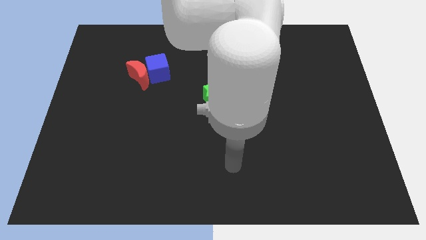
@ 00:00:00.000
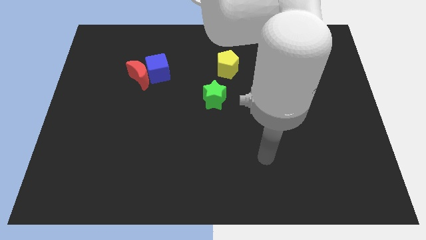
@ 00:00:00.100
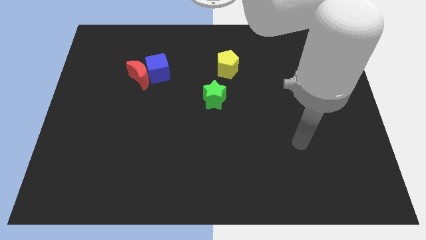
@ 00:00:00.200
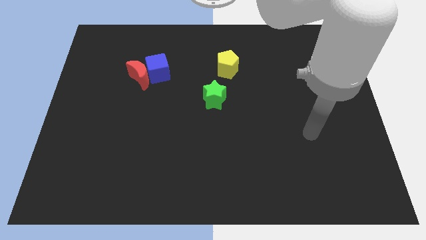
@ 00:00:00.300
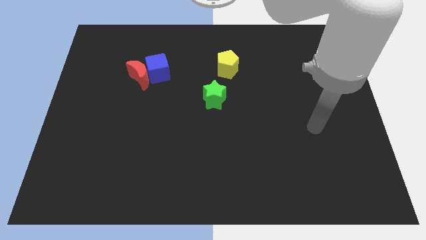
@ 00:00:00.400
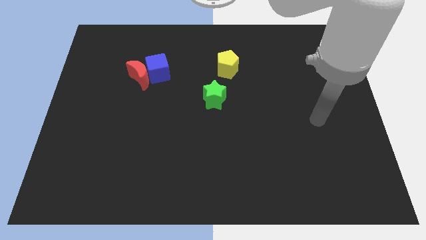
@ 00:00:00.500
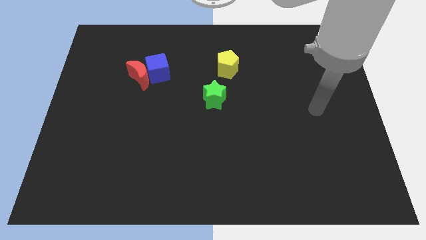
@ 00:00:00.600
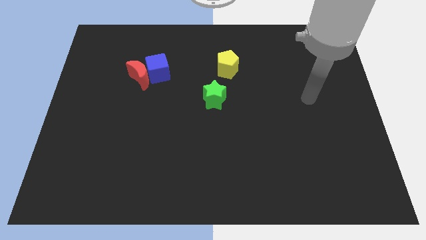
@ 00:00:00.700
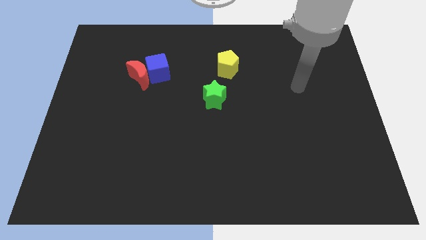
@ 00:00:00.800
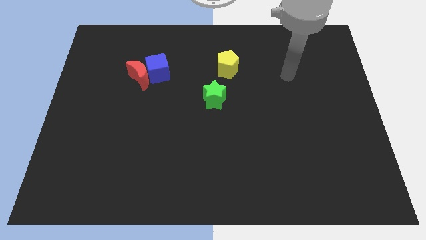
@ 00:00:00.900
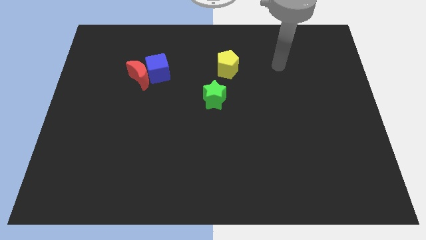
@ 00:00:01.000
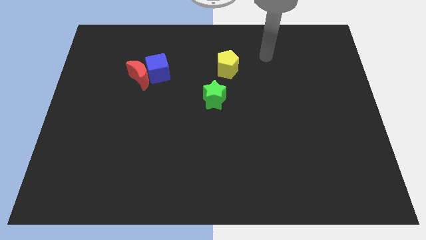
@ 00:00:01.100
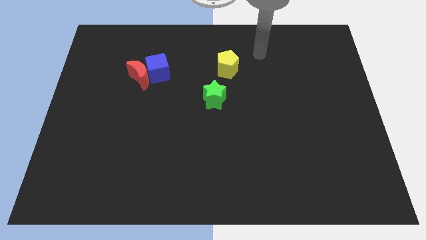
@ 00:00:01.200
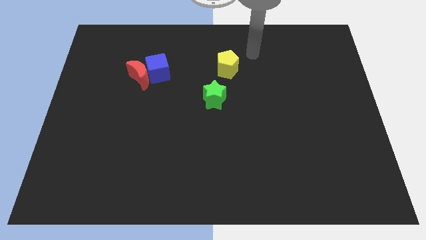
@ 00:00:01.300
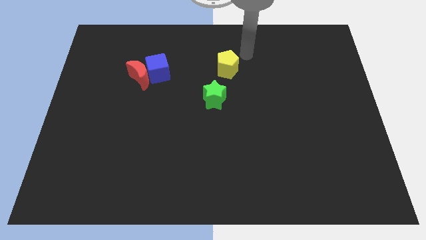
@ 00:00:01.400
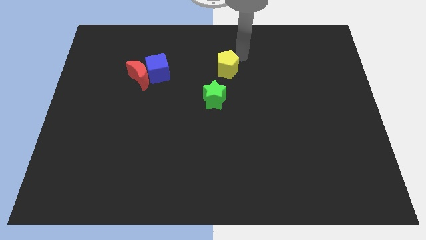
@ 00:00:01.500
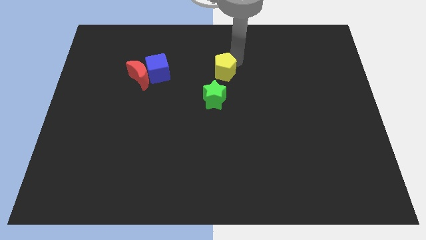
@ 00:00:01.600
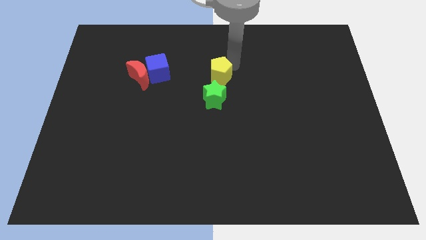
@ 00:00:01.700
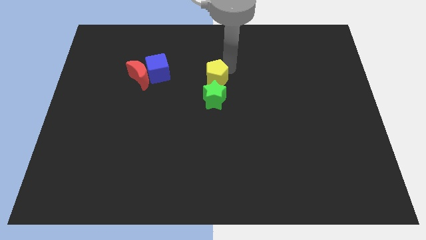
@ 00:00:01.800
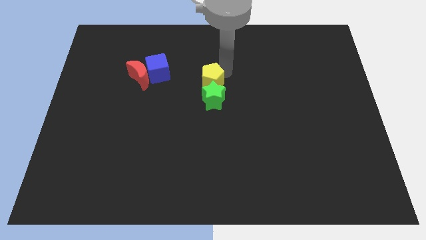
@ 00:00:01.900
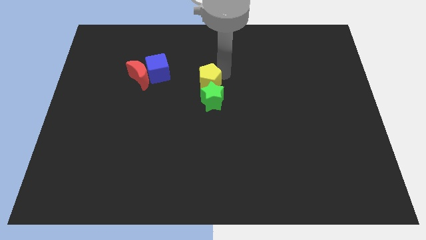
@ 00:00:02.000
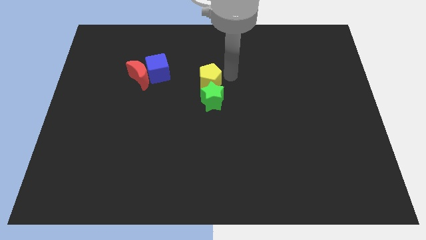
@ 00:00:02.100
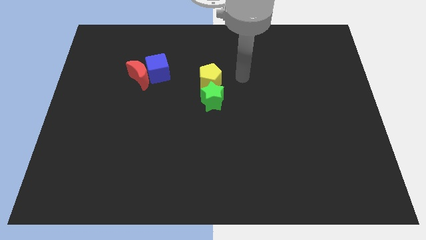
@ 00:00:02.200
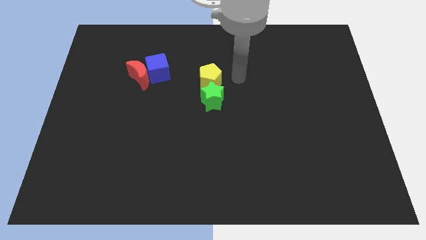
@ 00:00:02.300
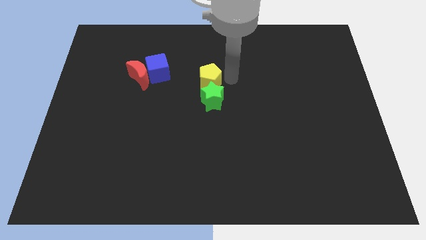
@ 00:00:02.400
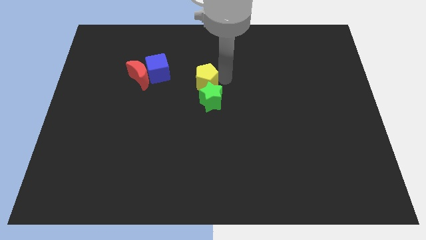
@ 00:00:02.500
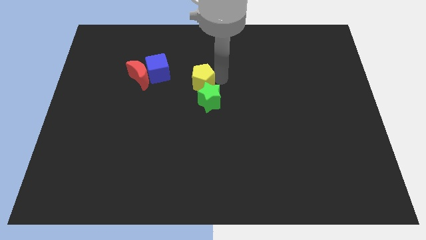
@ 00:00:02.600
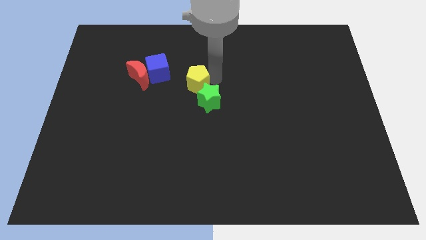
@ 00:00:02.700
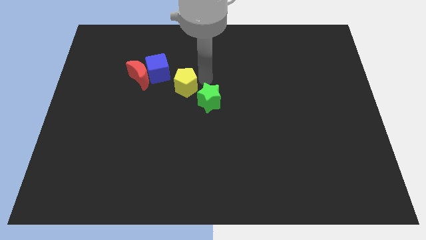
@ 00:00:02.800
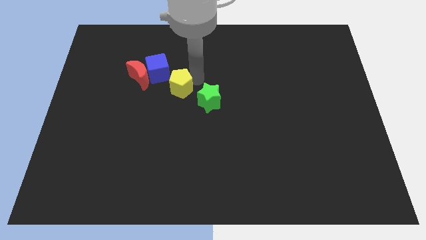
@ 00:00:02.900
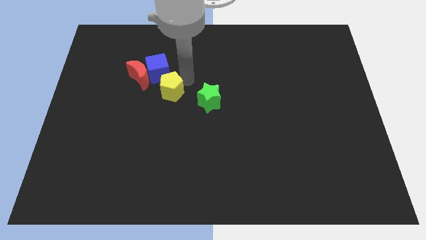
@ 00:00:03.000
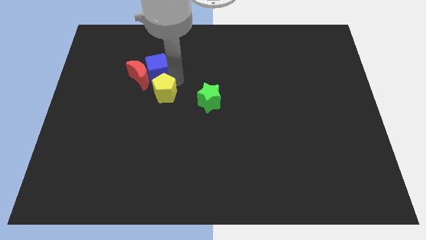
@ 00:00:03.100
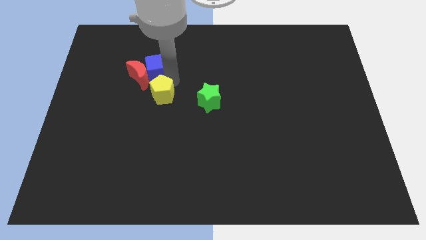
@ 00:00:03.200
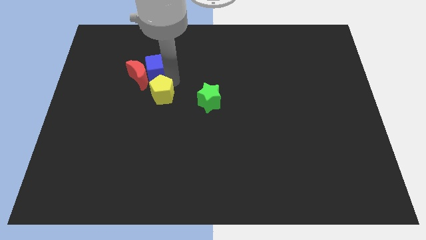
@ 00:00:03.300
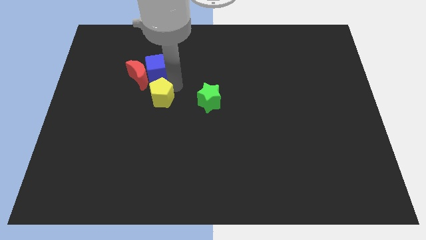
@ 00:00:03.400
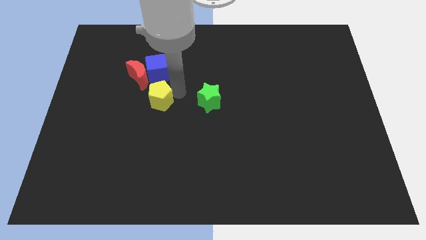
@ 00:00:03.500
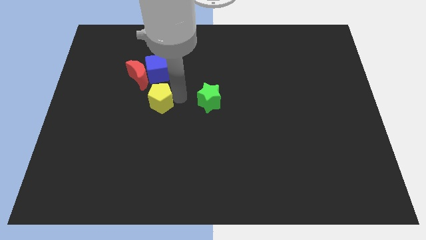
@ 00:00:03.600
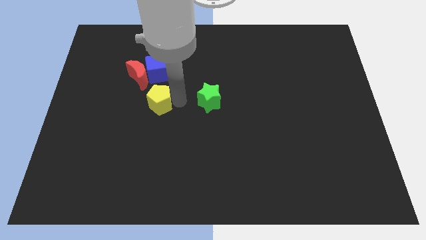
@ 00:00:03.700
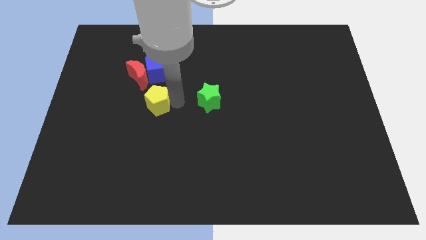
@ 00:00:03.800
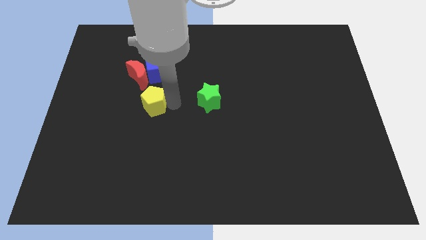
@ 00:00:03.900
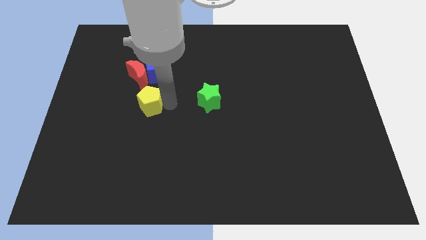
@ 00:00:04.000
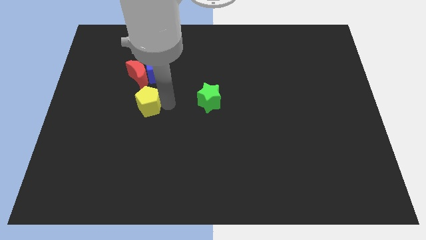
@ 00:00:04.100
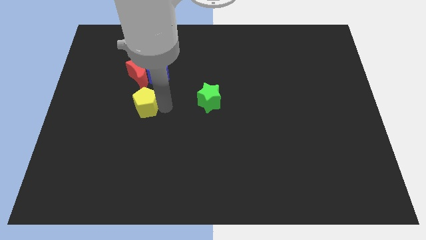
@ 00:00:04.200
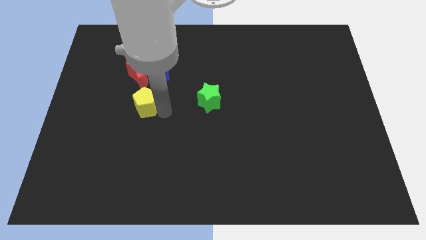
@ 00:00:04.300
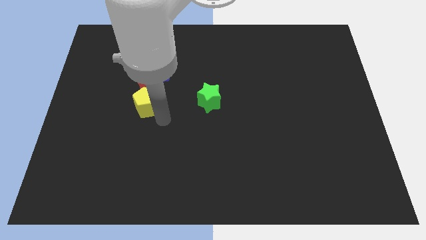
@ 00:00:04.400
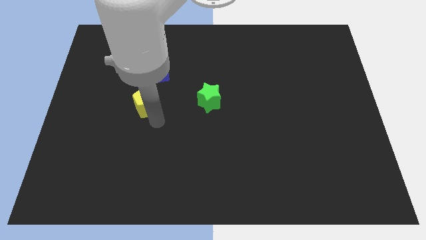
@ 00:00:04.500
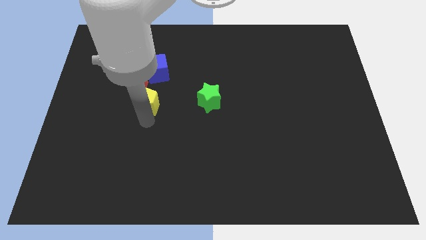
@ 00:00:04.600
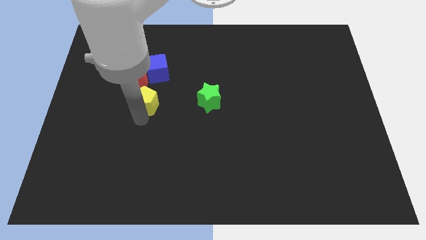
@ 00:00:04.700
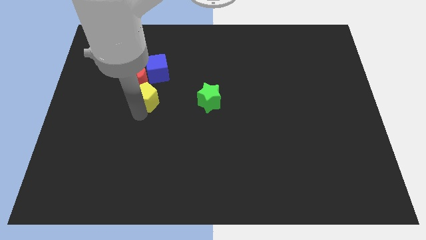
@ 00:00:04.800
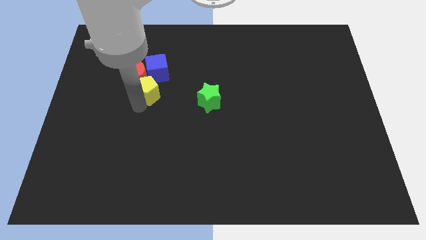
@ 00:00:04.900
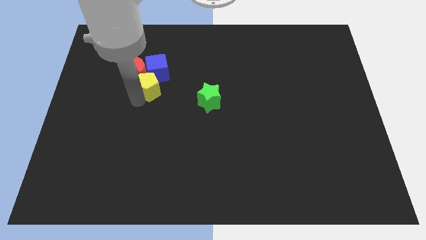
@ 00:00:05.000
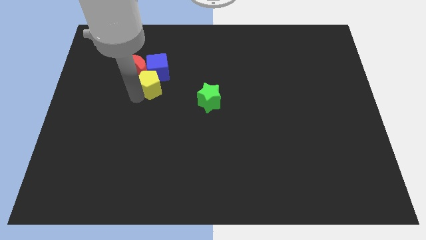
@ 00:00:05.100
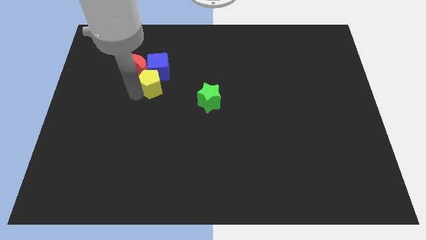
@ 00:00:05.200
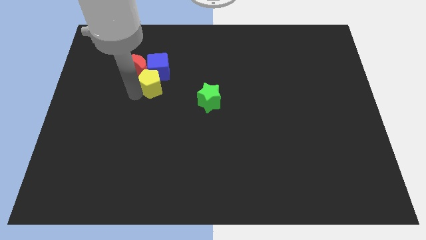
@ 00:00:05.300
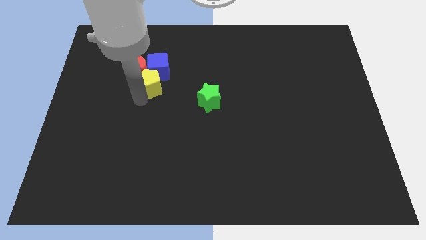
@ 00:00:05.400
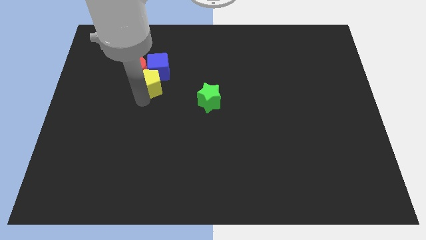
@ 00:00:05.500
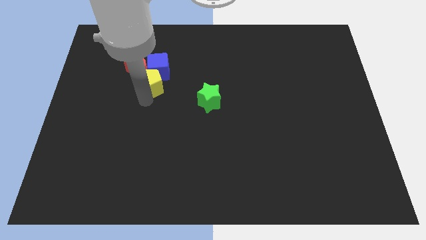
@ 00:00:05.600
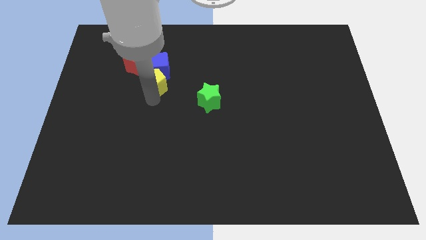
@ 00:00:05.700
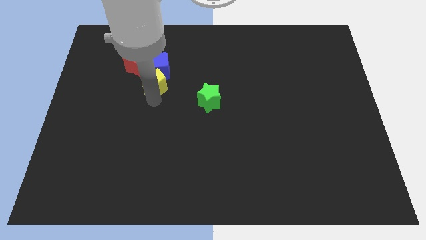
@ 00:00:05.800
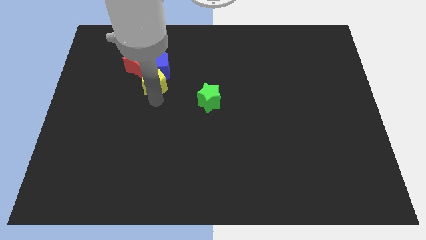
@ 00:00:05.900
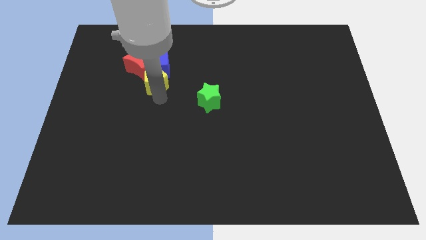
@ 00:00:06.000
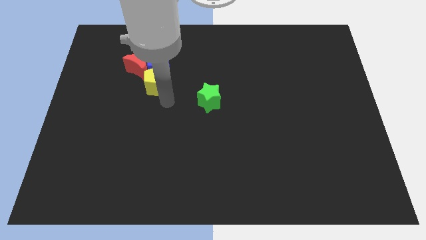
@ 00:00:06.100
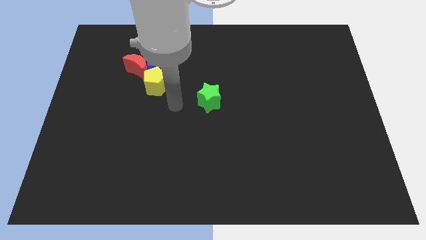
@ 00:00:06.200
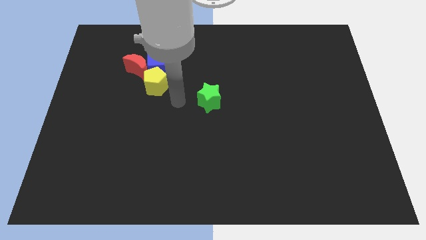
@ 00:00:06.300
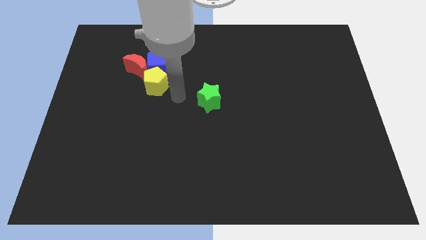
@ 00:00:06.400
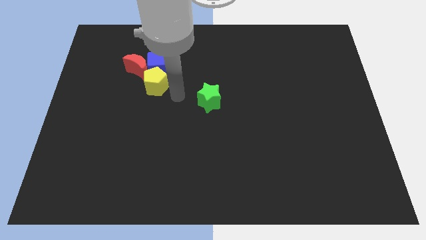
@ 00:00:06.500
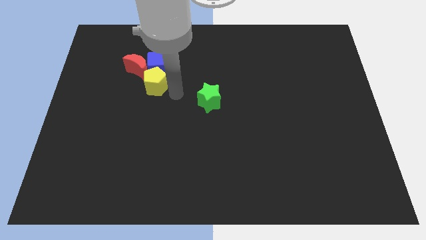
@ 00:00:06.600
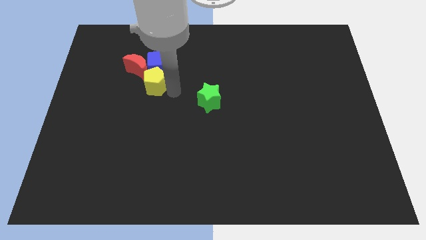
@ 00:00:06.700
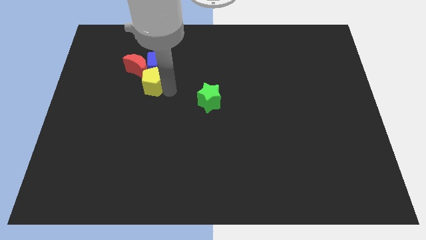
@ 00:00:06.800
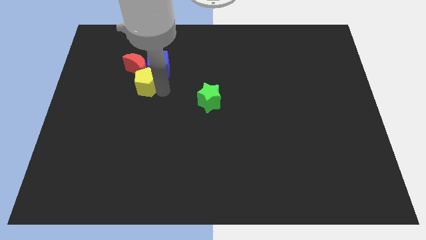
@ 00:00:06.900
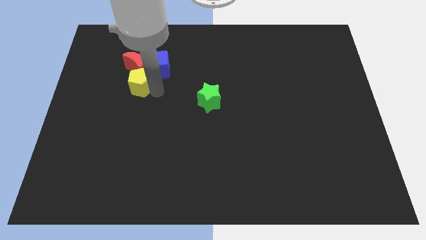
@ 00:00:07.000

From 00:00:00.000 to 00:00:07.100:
move the yellow pentagon close to the moon

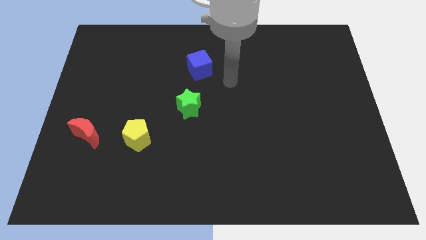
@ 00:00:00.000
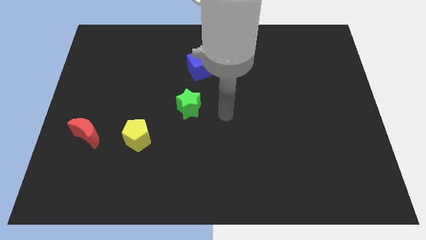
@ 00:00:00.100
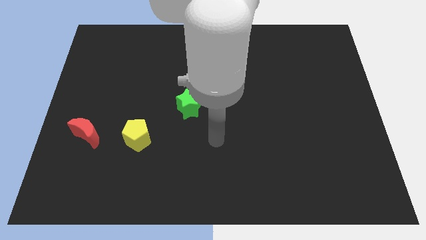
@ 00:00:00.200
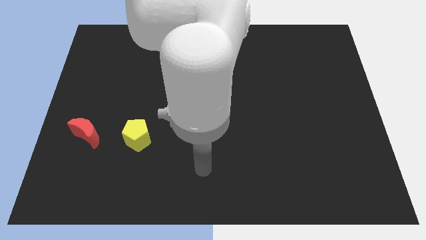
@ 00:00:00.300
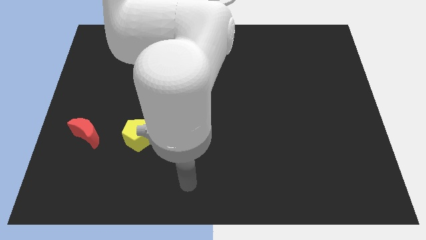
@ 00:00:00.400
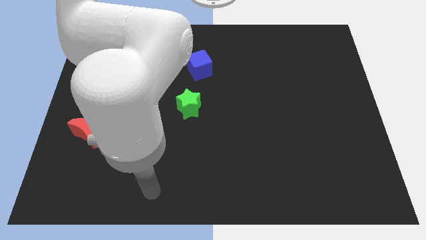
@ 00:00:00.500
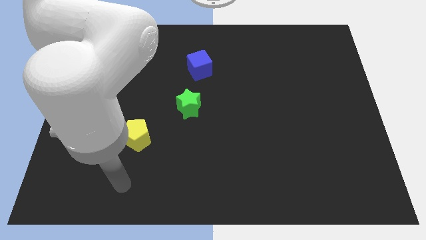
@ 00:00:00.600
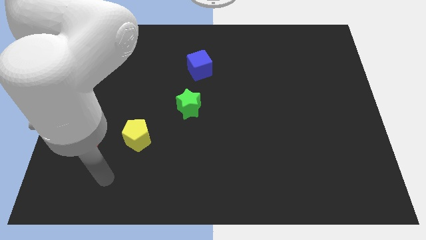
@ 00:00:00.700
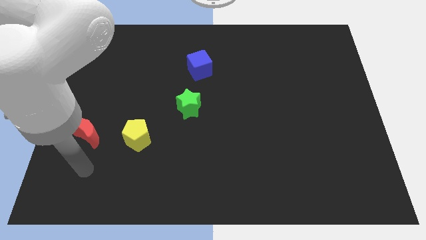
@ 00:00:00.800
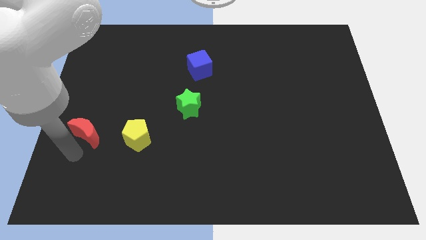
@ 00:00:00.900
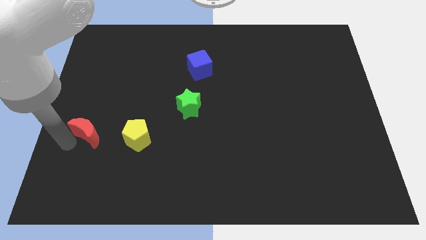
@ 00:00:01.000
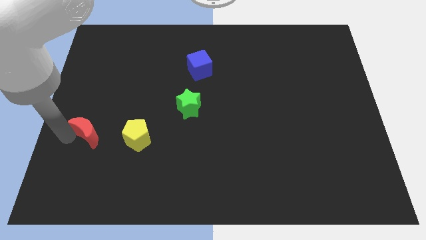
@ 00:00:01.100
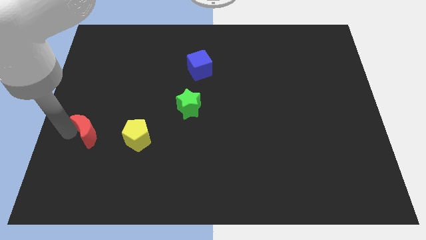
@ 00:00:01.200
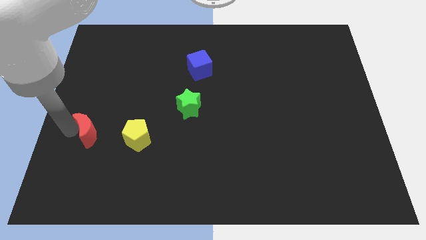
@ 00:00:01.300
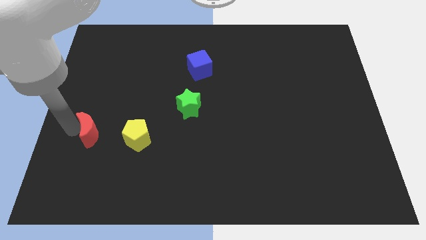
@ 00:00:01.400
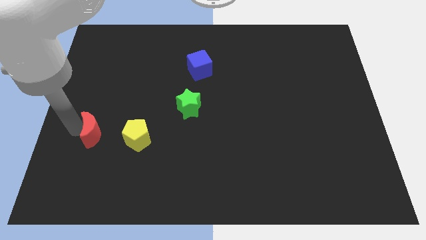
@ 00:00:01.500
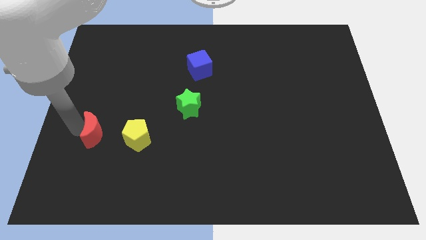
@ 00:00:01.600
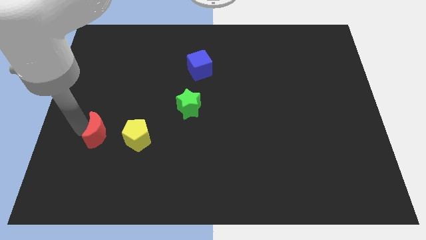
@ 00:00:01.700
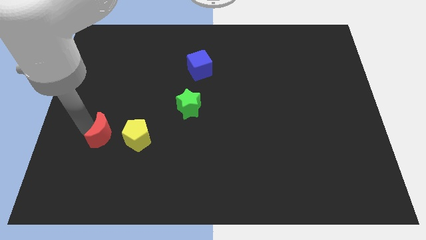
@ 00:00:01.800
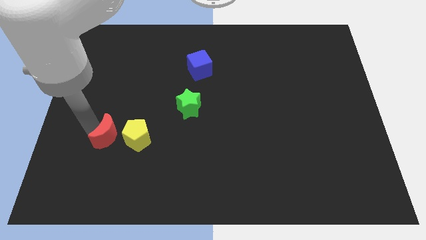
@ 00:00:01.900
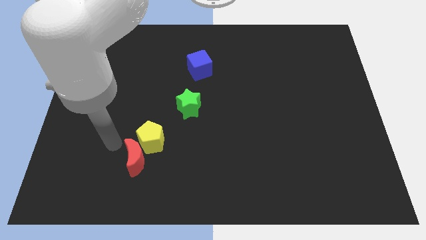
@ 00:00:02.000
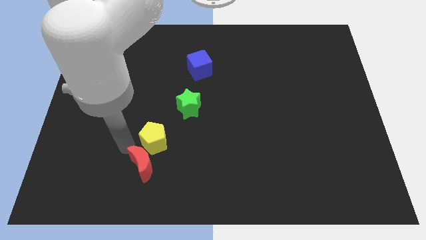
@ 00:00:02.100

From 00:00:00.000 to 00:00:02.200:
slide the moon towards the yellow block
